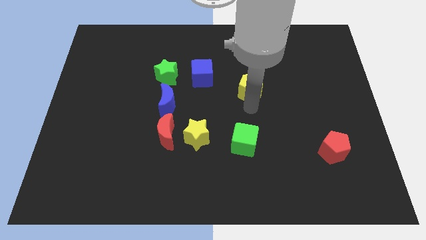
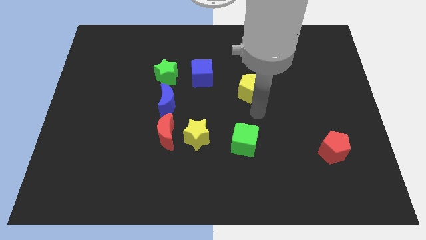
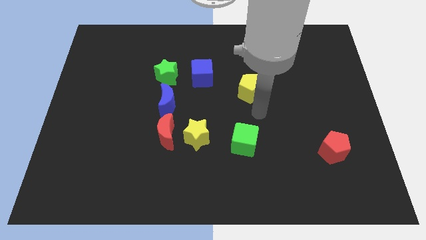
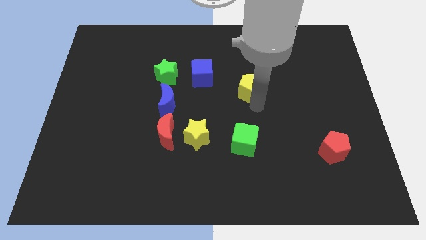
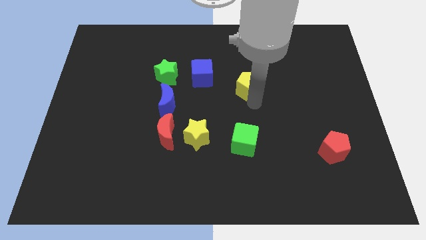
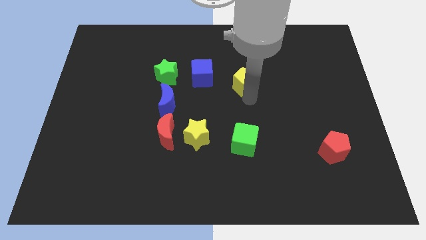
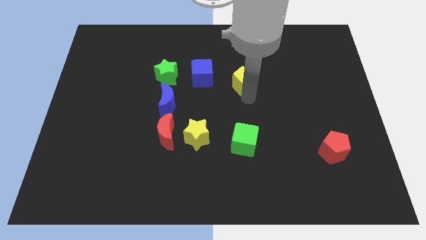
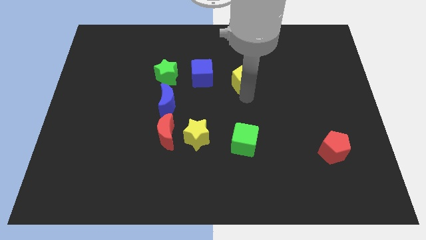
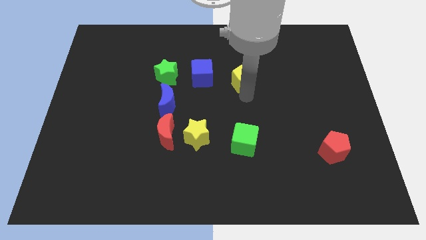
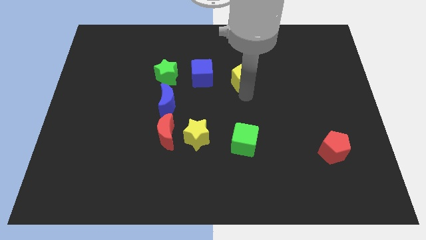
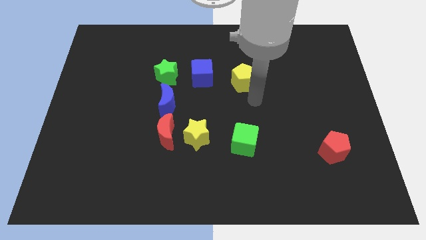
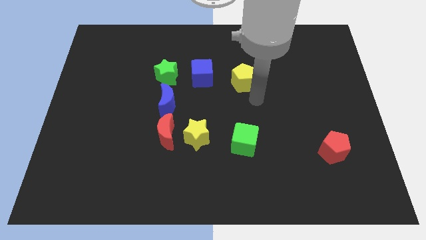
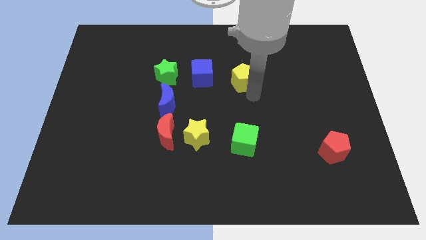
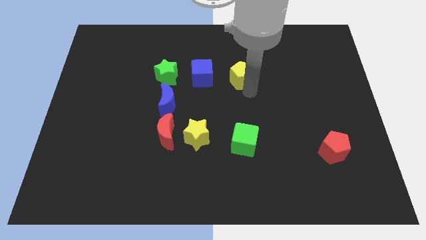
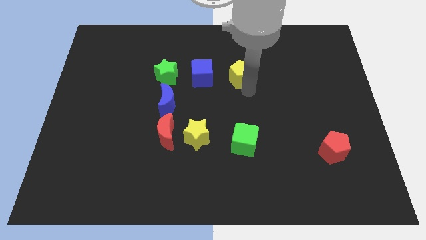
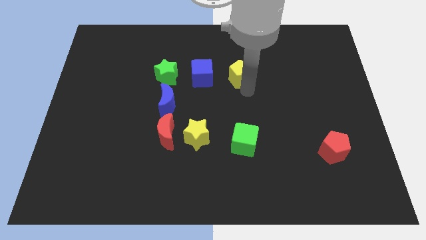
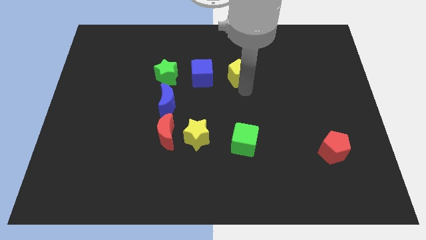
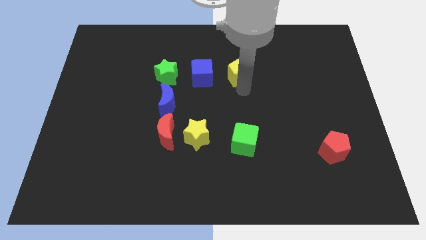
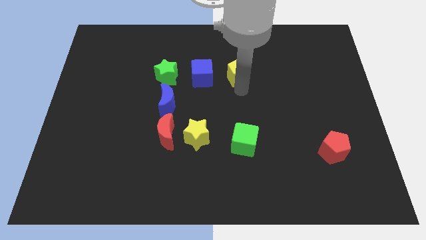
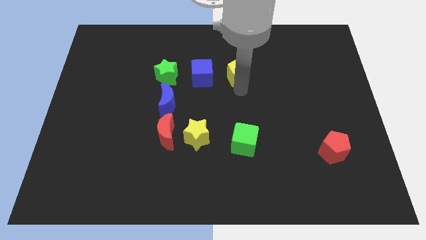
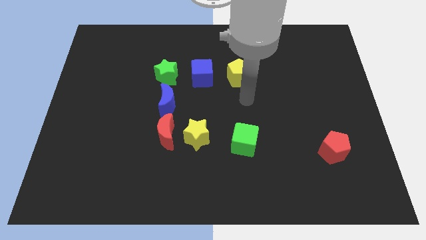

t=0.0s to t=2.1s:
move the yellow pentagon to right of blue cube

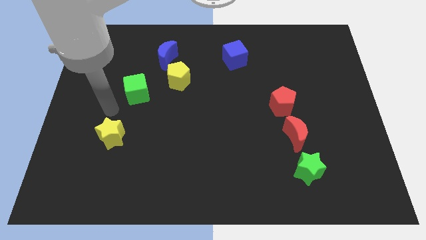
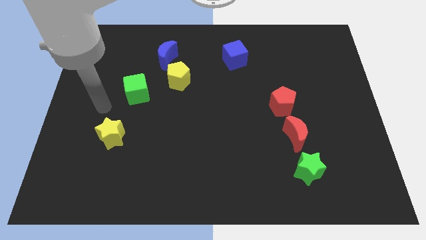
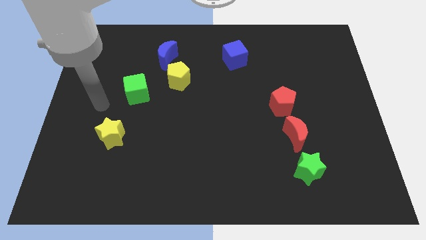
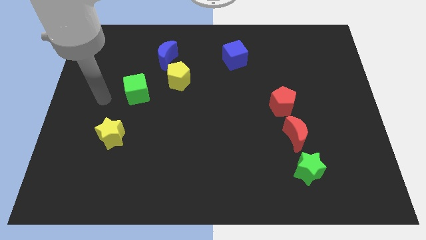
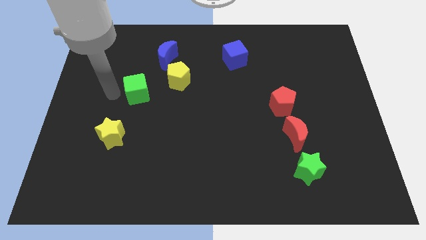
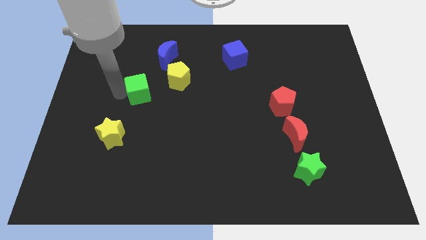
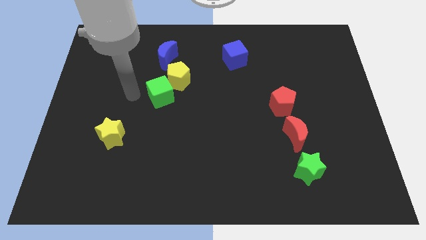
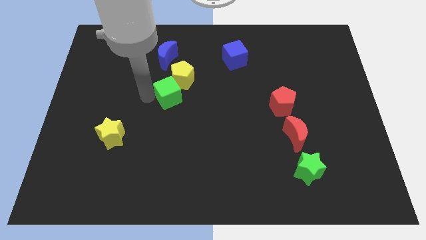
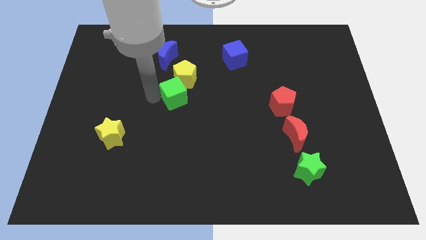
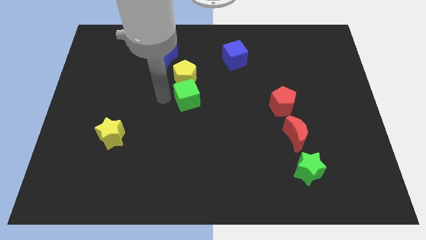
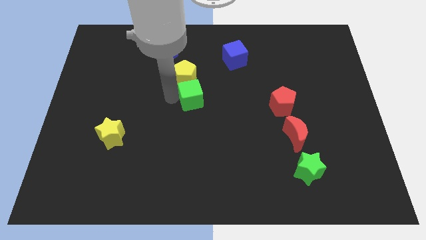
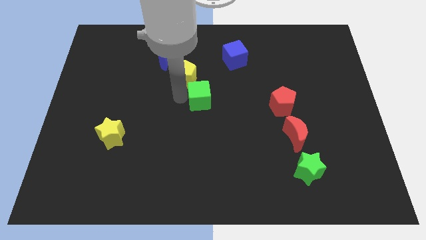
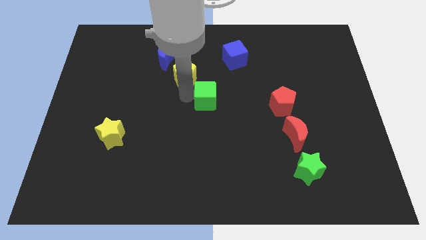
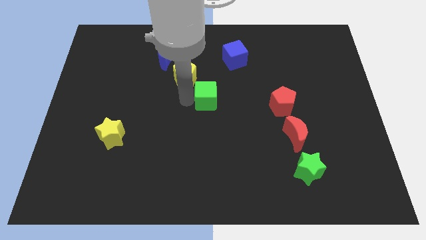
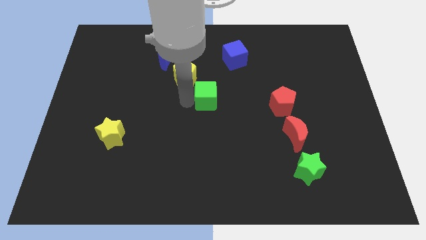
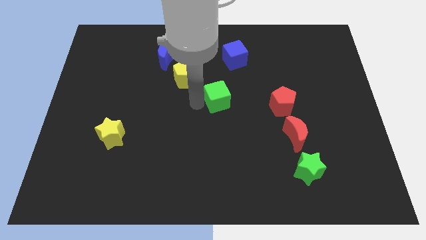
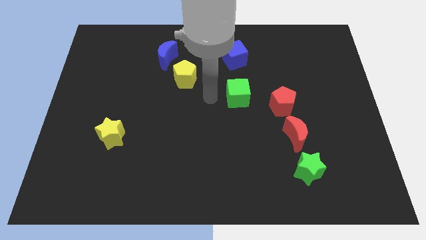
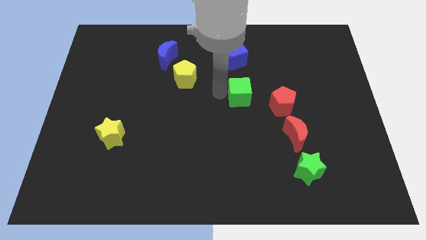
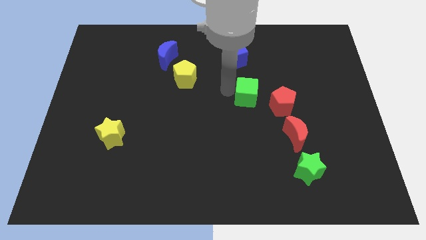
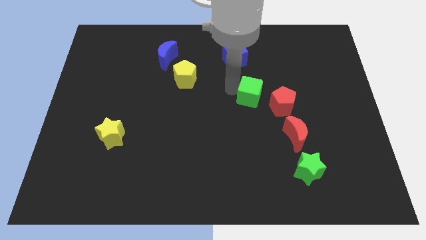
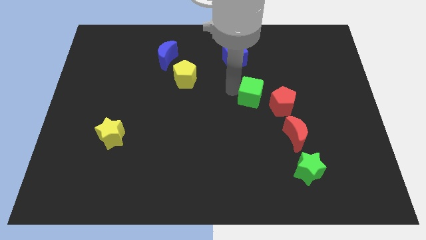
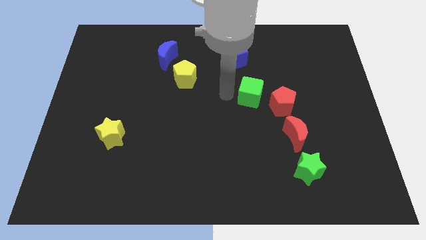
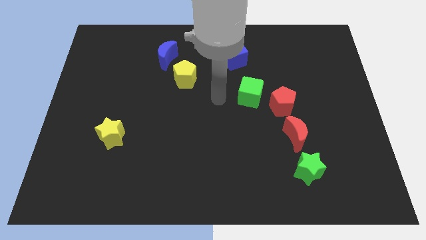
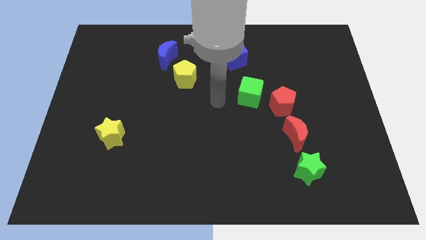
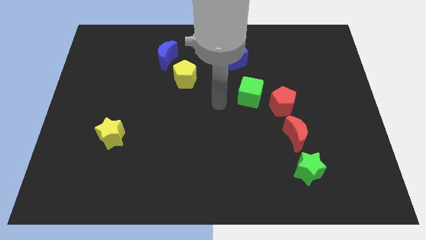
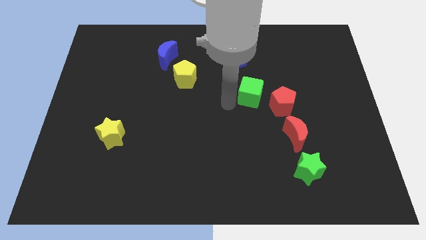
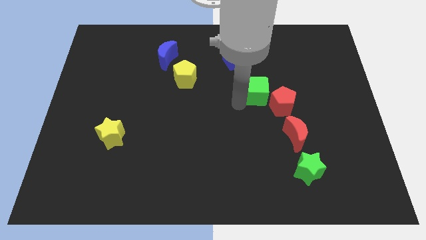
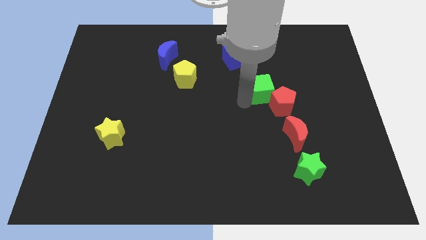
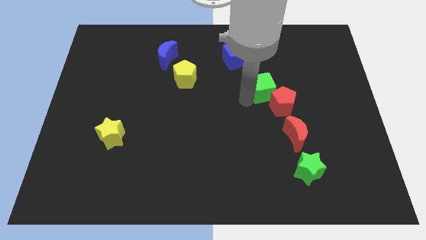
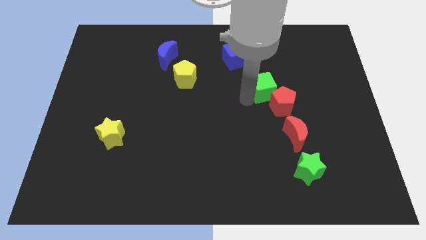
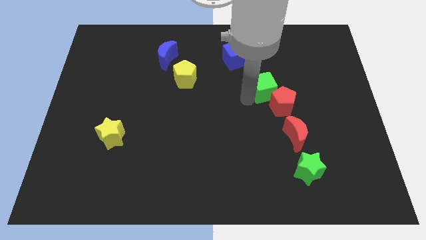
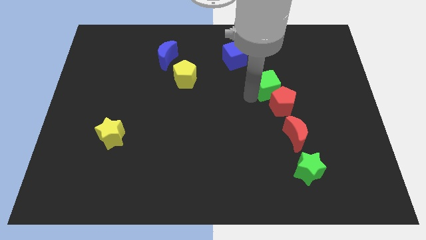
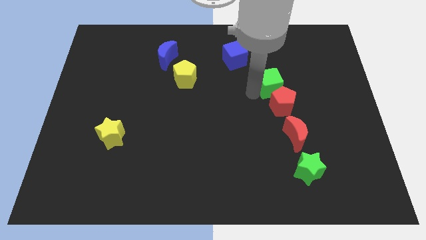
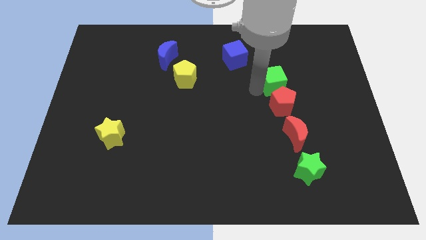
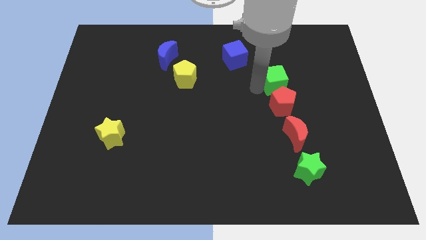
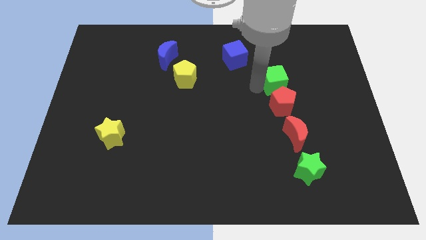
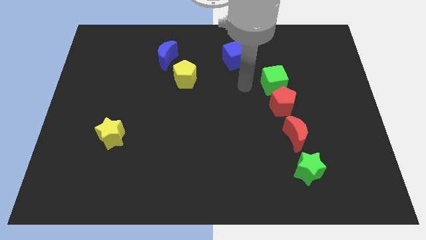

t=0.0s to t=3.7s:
move the green cube vertically above the red pentagon

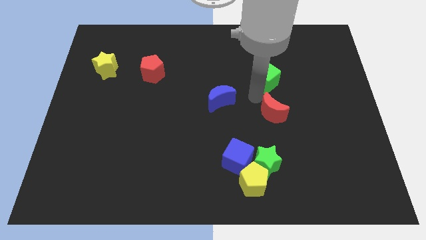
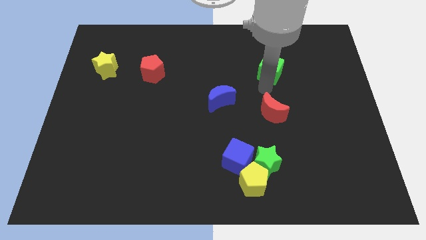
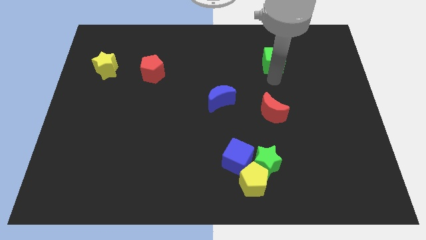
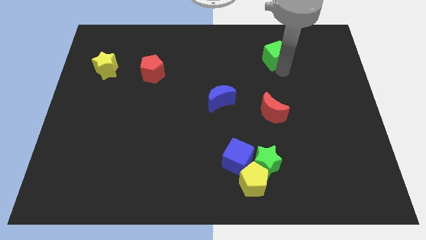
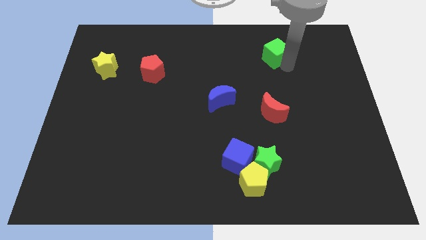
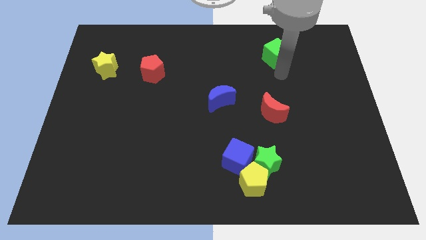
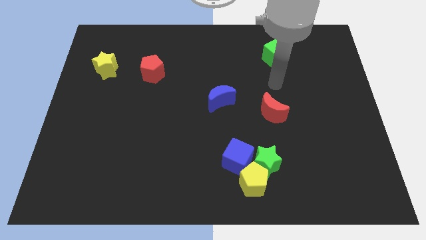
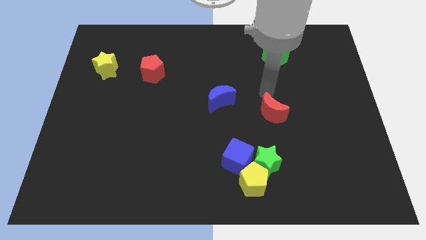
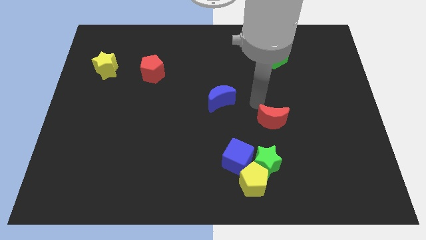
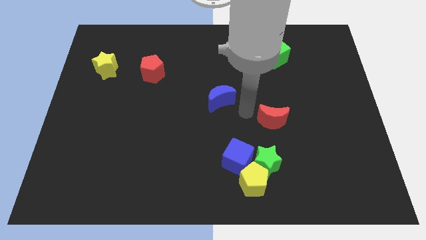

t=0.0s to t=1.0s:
push the green cube to the top of the board

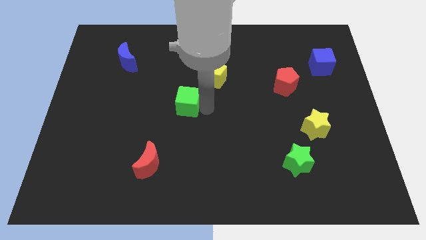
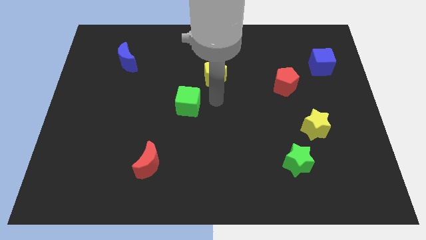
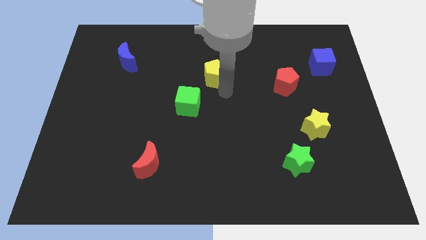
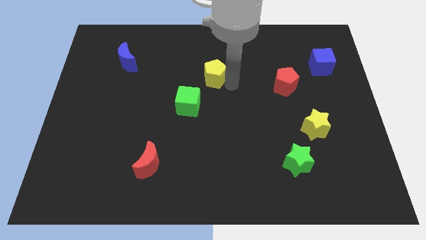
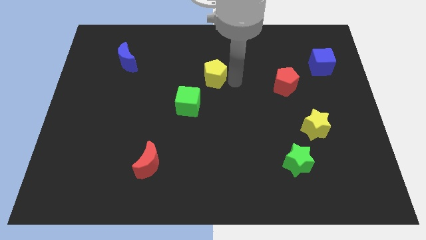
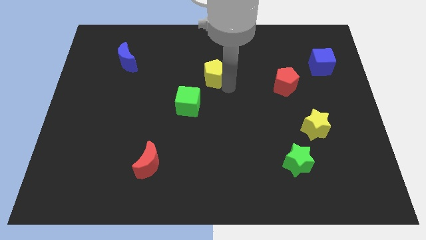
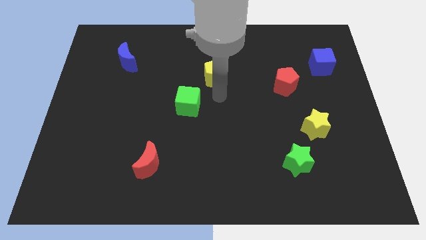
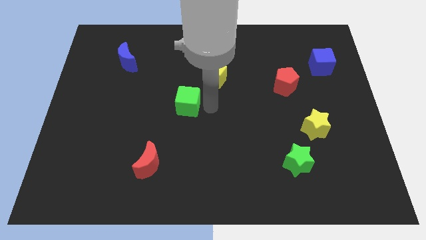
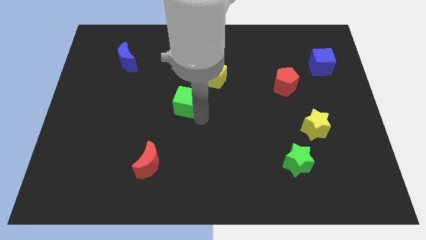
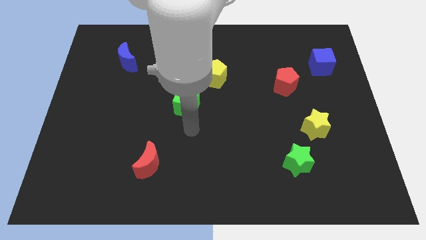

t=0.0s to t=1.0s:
tap at the right side of the green cube

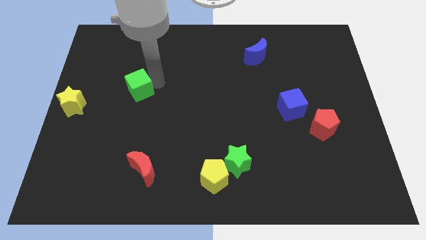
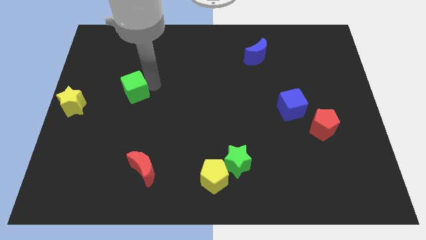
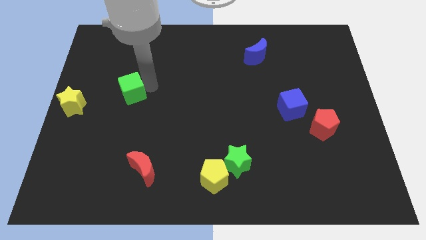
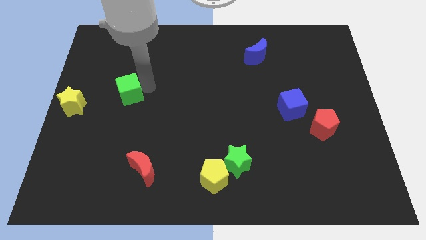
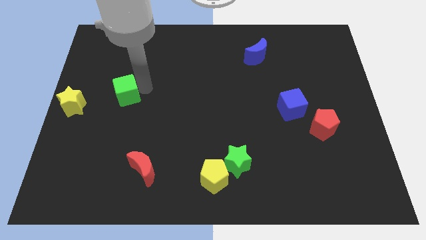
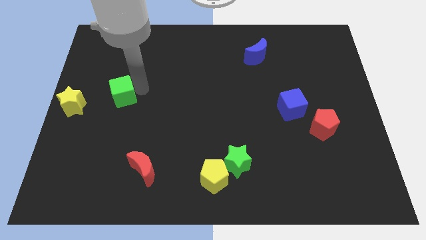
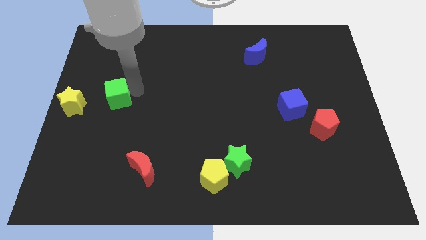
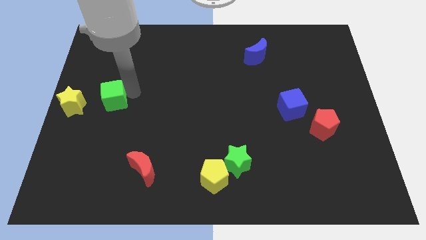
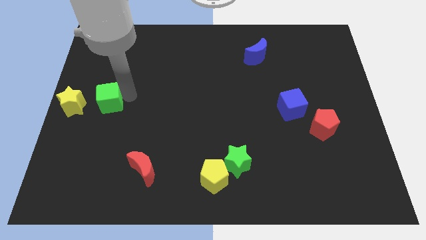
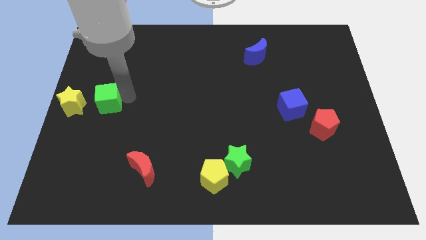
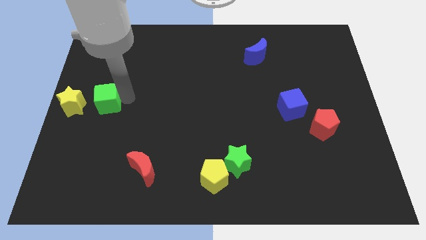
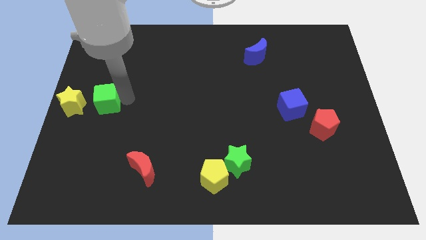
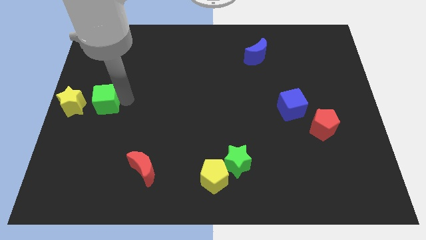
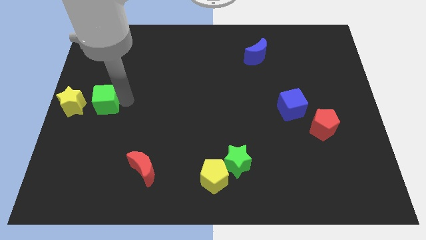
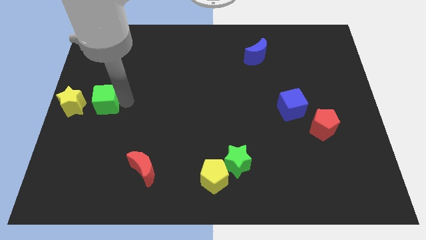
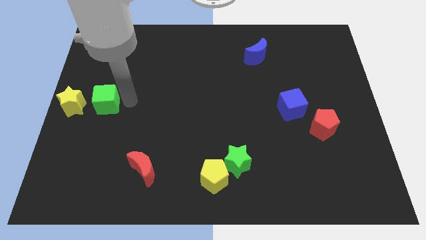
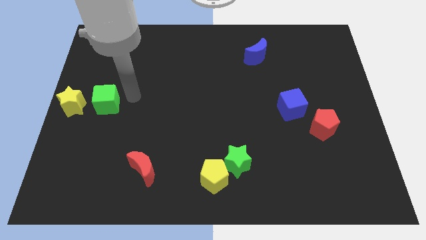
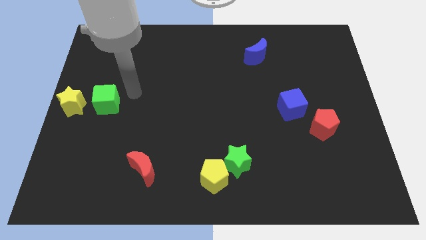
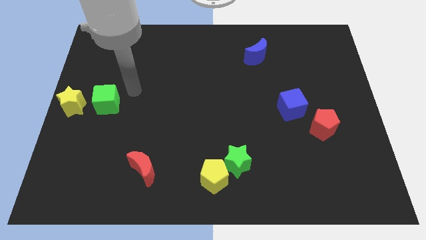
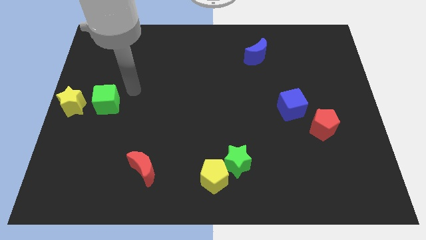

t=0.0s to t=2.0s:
move the green cube close to the yellow star
